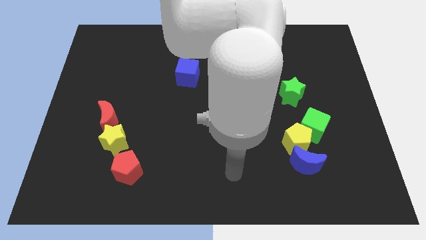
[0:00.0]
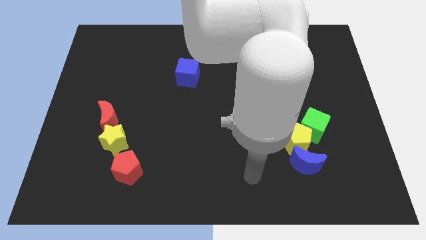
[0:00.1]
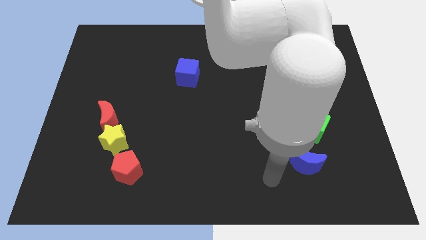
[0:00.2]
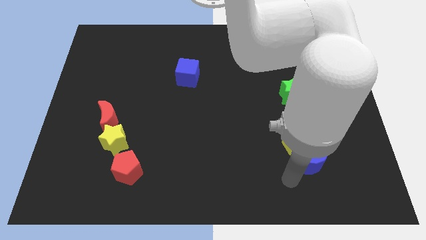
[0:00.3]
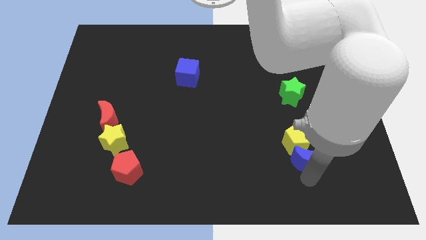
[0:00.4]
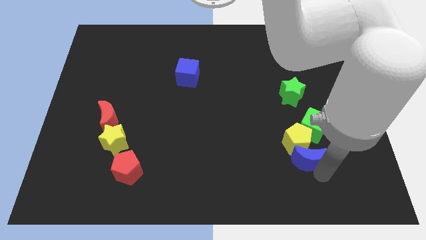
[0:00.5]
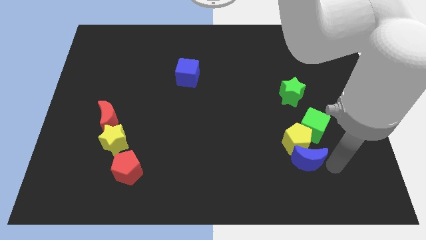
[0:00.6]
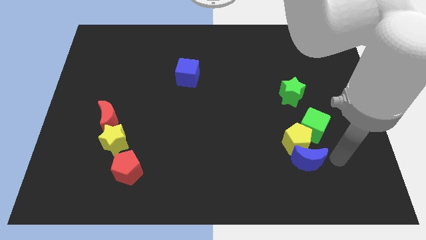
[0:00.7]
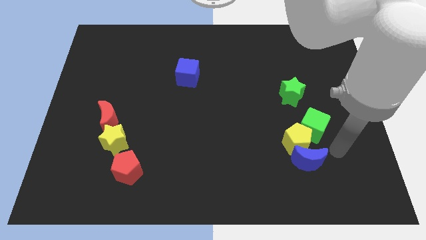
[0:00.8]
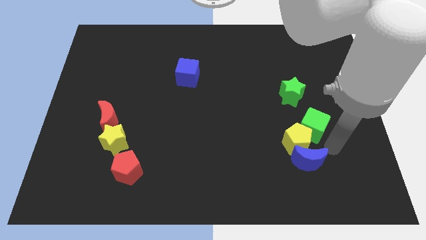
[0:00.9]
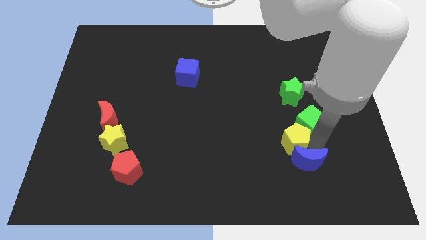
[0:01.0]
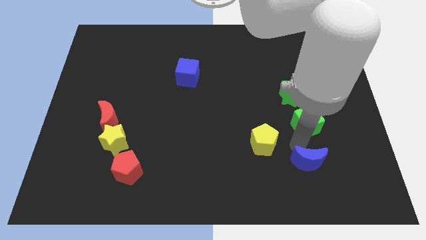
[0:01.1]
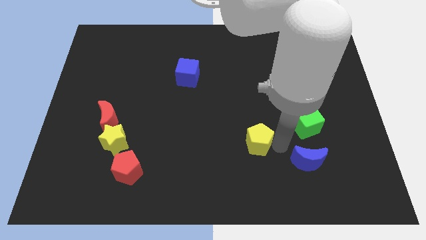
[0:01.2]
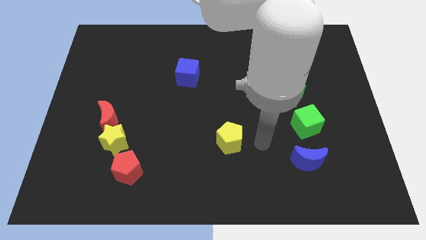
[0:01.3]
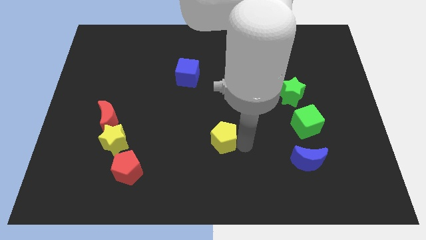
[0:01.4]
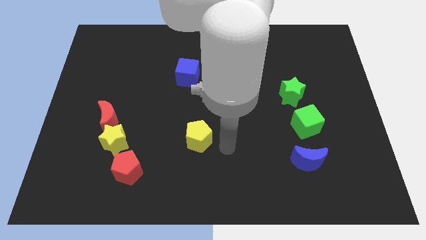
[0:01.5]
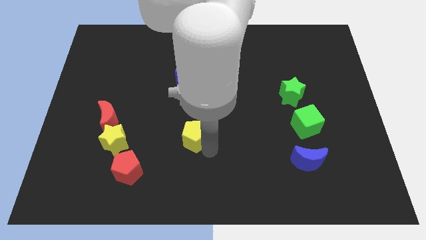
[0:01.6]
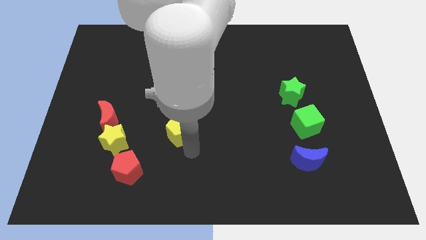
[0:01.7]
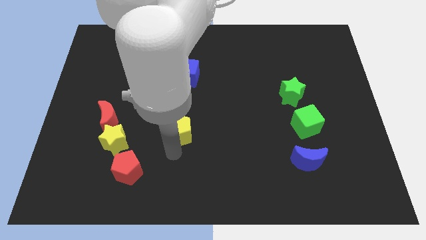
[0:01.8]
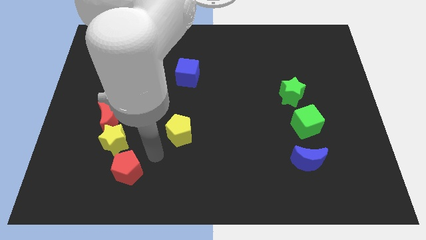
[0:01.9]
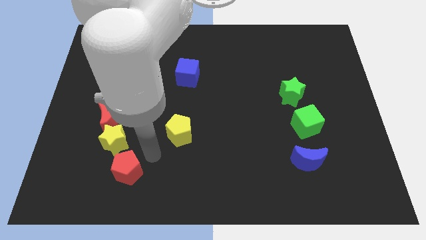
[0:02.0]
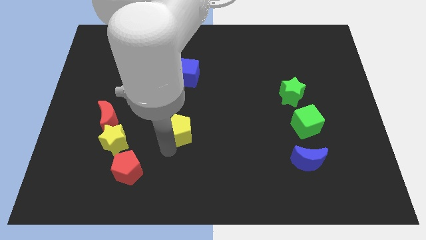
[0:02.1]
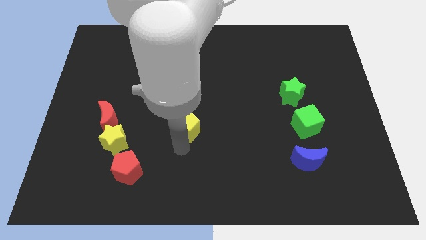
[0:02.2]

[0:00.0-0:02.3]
place the yellow pentagon vertically below the blue cube

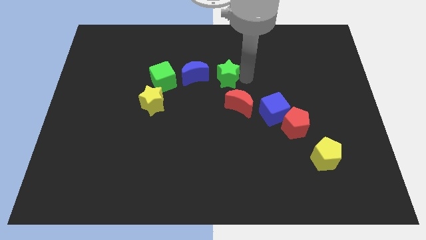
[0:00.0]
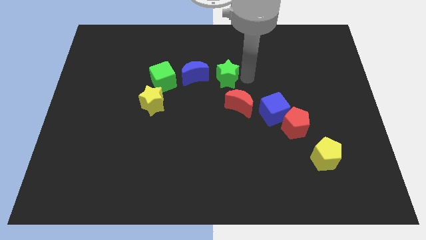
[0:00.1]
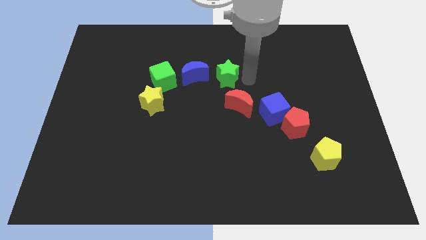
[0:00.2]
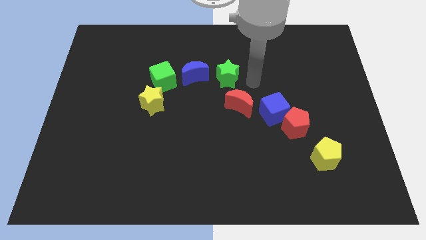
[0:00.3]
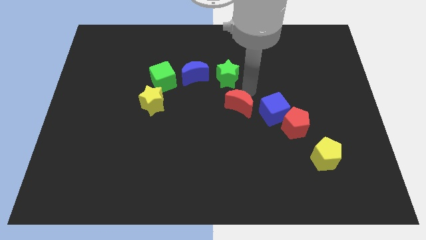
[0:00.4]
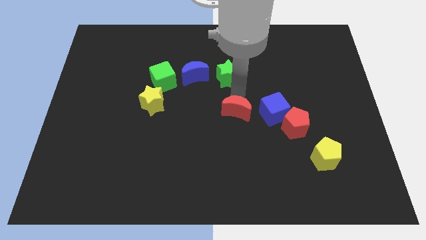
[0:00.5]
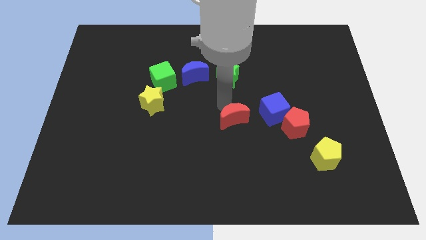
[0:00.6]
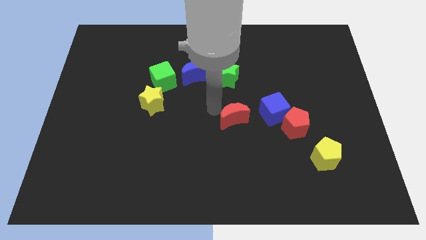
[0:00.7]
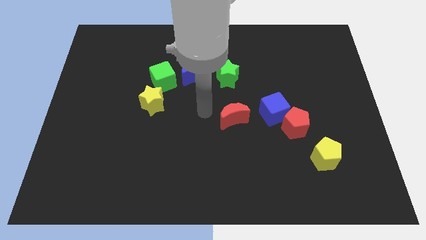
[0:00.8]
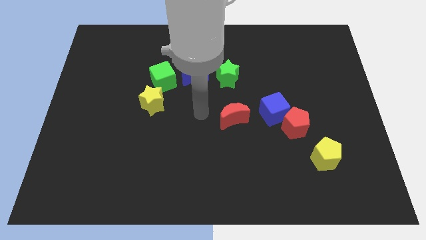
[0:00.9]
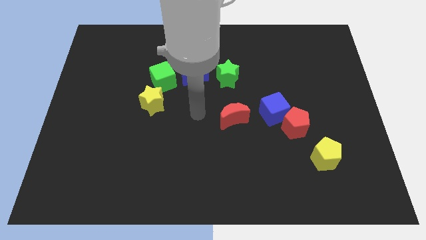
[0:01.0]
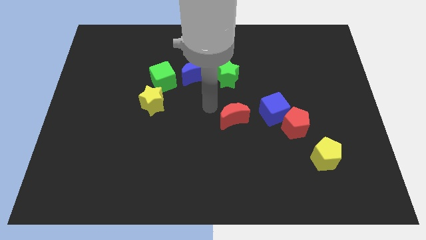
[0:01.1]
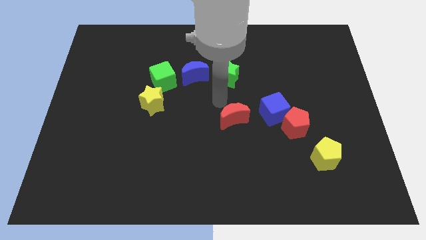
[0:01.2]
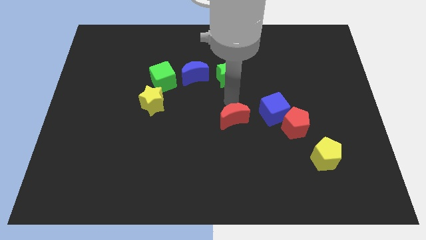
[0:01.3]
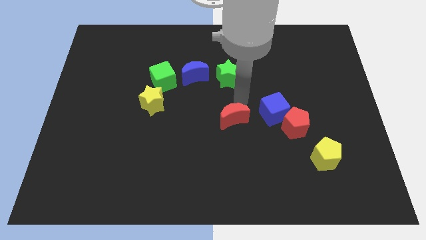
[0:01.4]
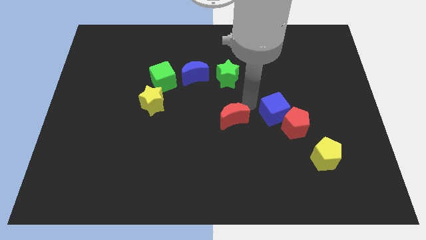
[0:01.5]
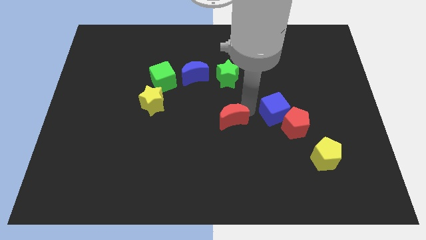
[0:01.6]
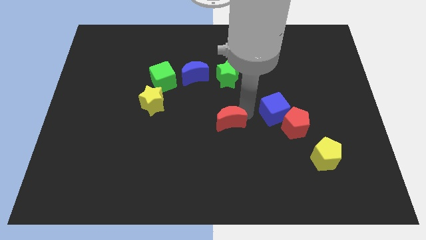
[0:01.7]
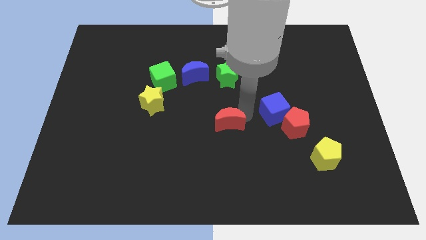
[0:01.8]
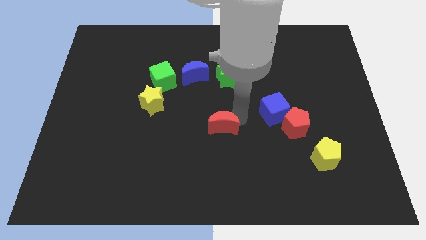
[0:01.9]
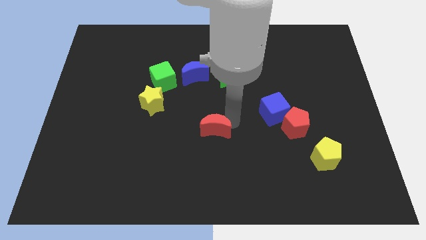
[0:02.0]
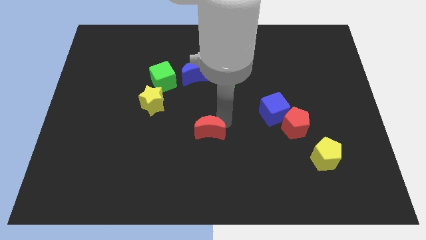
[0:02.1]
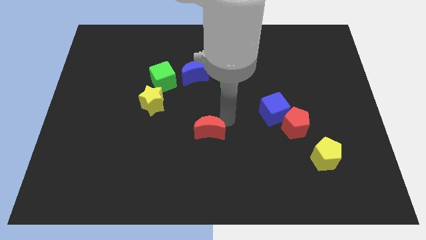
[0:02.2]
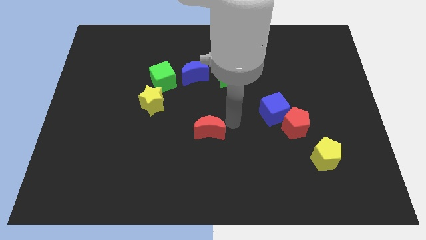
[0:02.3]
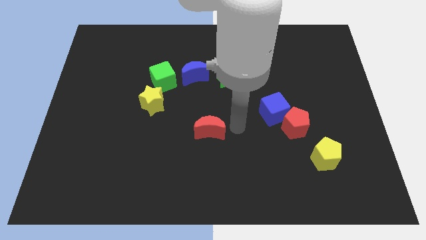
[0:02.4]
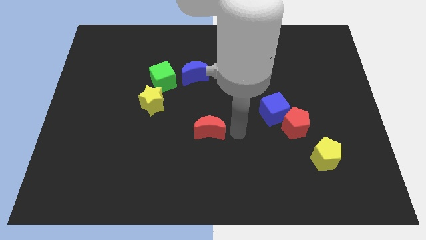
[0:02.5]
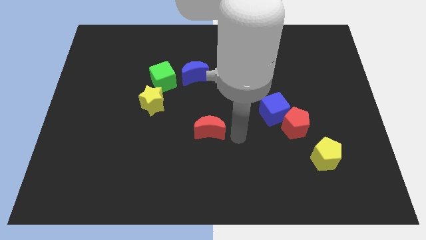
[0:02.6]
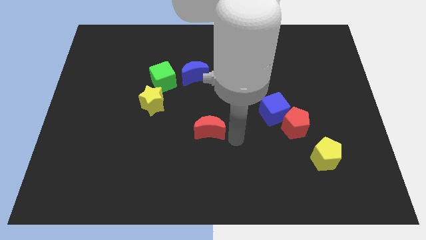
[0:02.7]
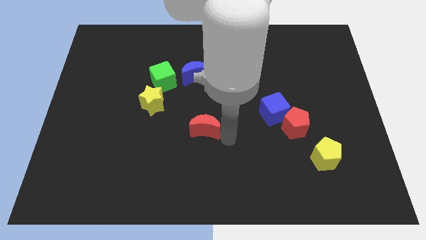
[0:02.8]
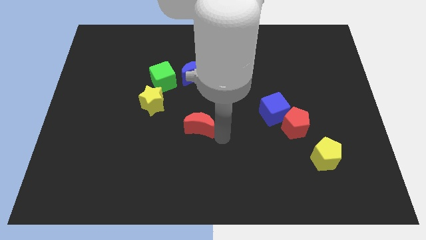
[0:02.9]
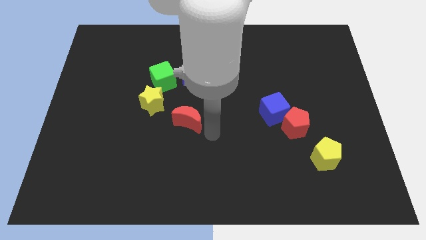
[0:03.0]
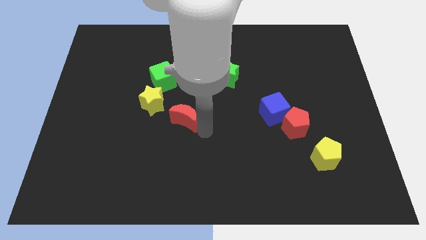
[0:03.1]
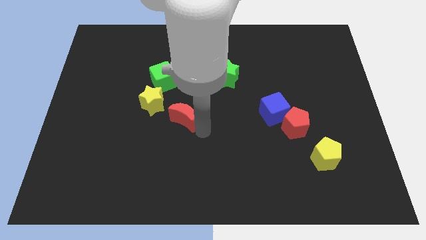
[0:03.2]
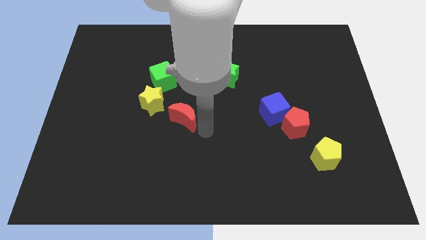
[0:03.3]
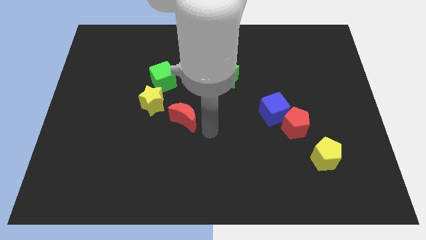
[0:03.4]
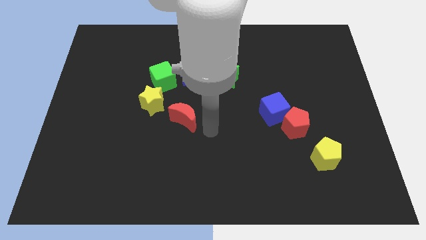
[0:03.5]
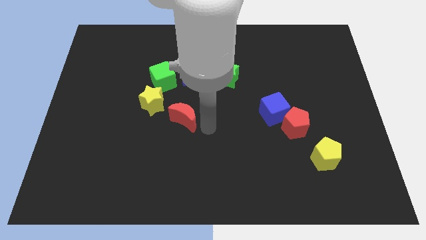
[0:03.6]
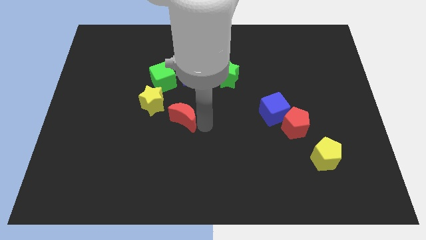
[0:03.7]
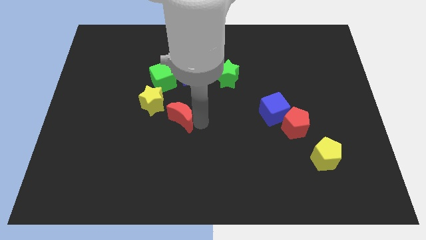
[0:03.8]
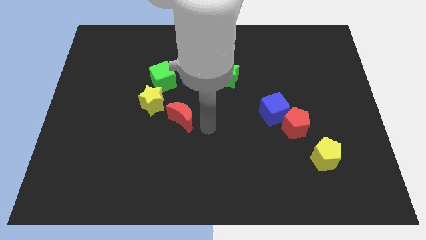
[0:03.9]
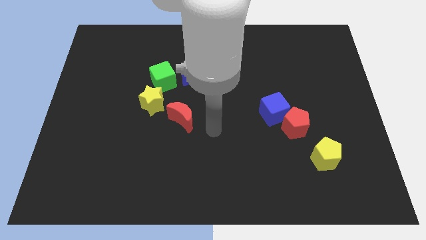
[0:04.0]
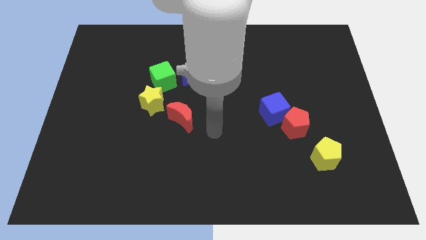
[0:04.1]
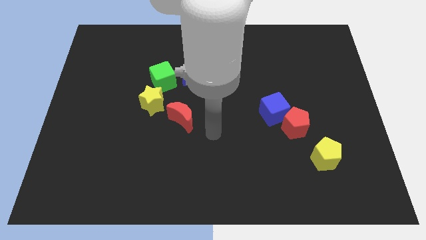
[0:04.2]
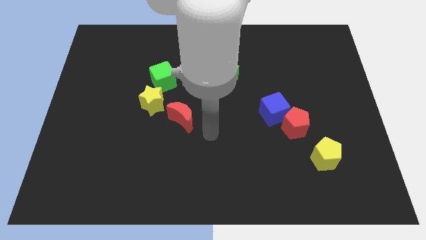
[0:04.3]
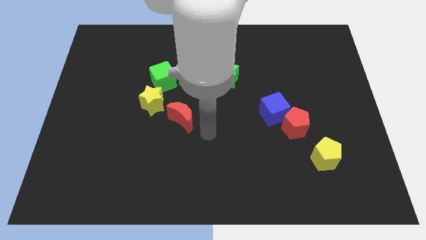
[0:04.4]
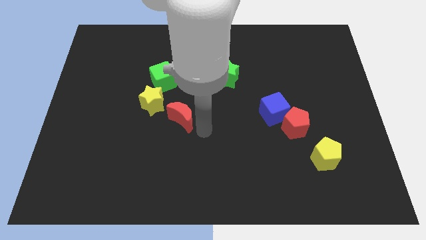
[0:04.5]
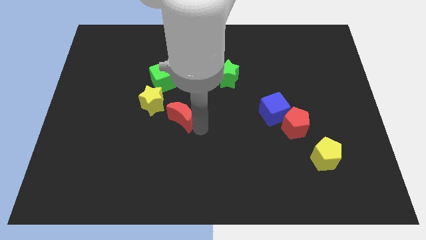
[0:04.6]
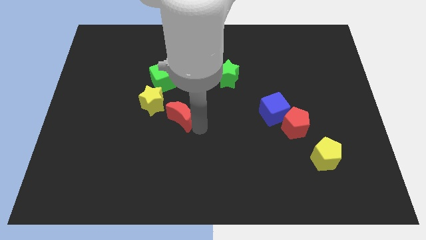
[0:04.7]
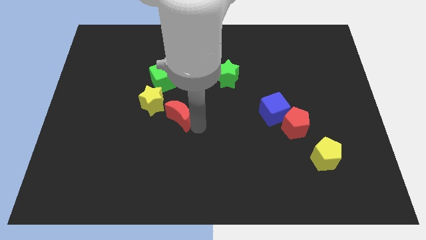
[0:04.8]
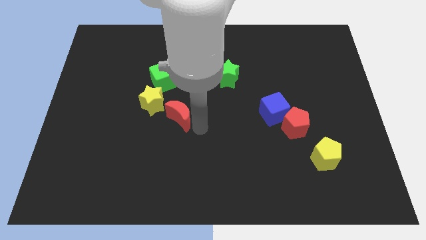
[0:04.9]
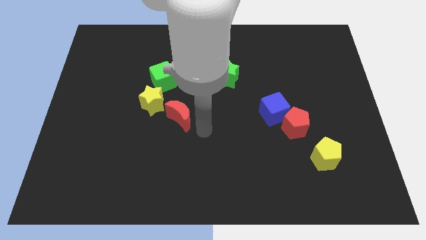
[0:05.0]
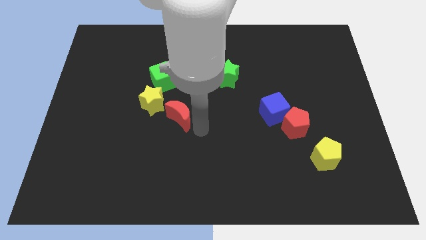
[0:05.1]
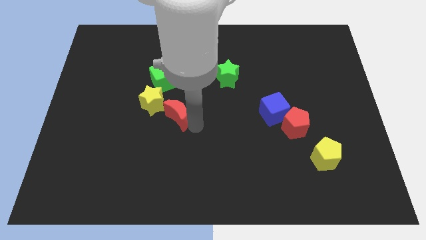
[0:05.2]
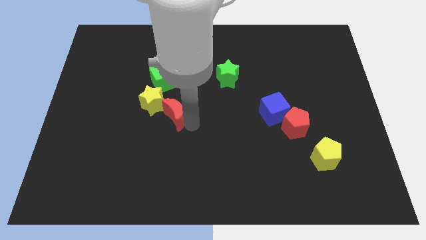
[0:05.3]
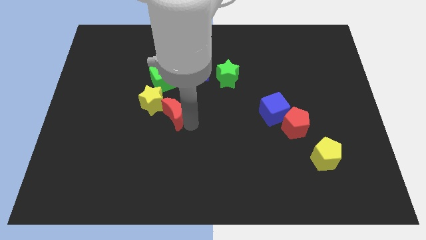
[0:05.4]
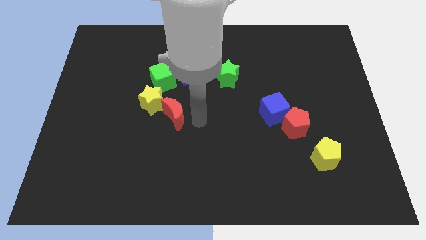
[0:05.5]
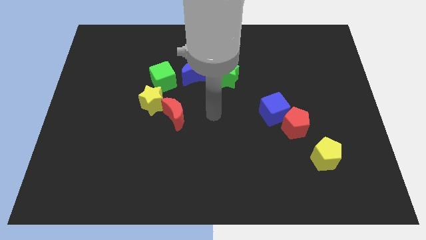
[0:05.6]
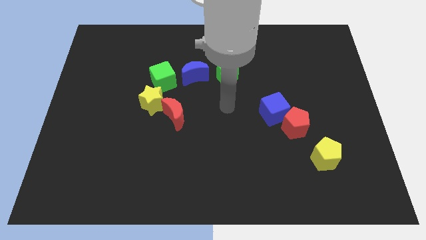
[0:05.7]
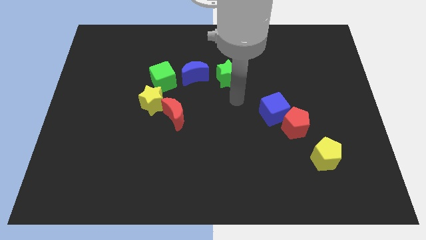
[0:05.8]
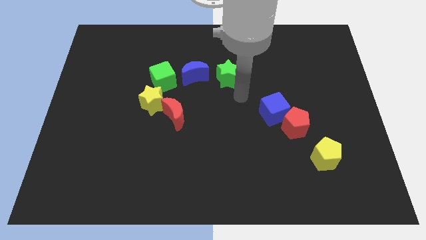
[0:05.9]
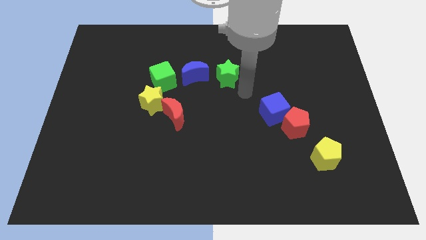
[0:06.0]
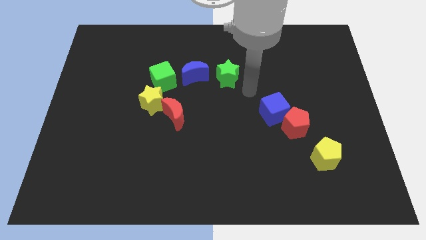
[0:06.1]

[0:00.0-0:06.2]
push the red moon into yellow star

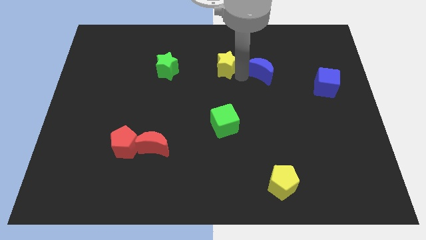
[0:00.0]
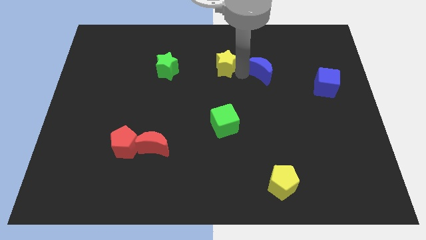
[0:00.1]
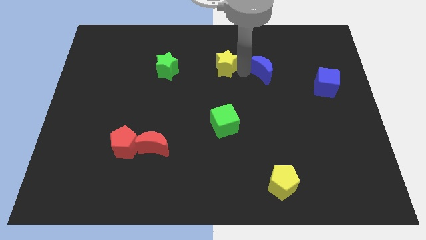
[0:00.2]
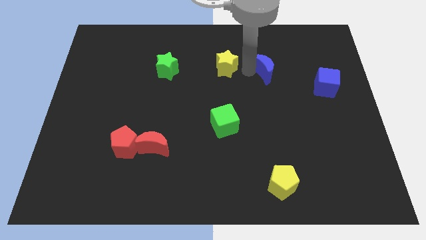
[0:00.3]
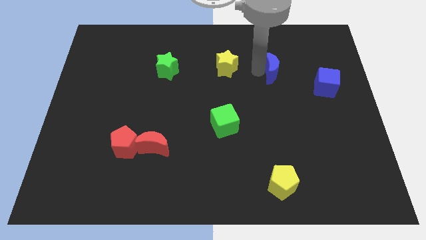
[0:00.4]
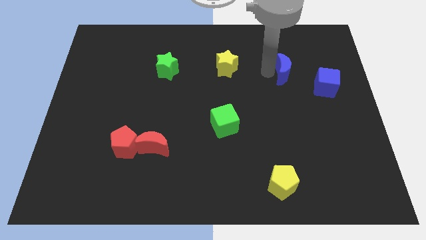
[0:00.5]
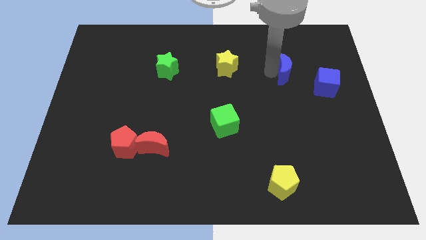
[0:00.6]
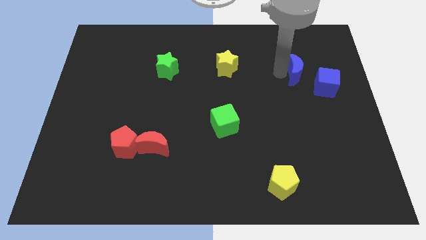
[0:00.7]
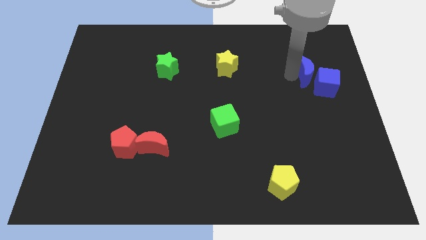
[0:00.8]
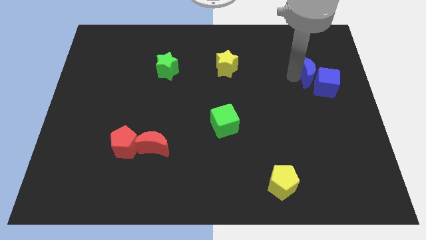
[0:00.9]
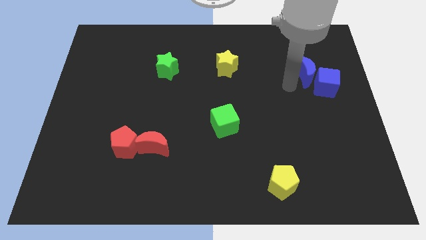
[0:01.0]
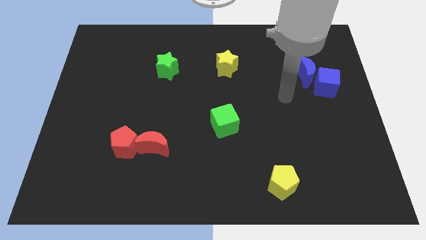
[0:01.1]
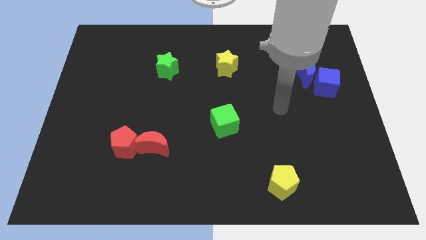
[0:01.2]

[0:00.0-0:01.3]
push blue moon left to the blue cube
